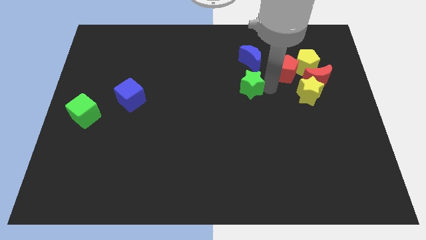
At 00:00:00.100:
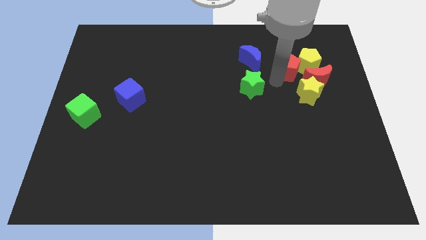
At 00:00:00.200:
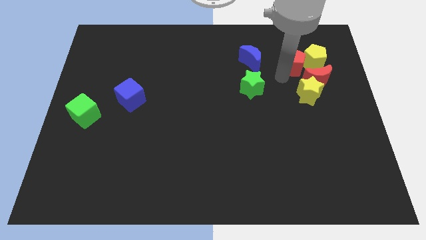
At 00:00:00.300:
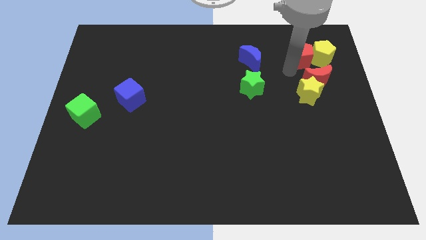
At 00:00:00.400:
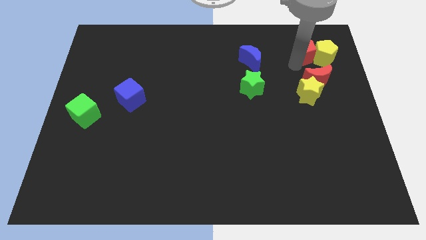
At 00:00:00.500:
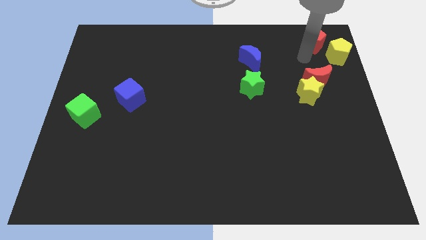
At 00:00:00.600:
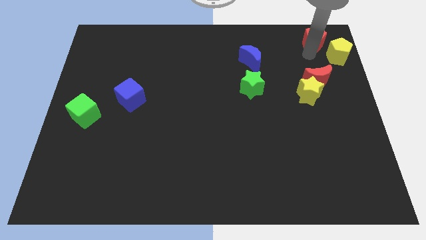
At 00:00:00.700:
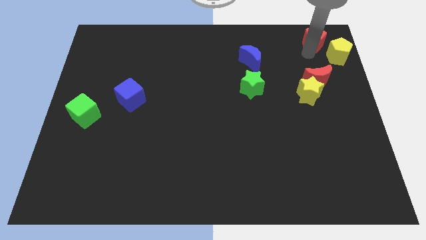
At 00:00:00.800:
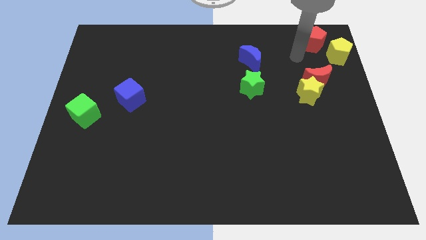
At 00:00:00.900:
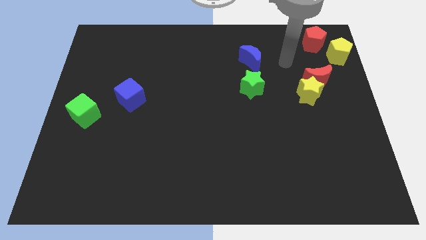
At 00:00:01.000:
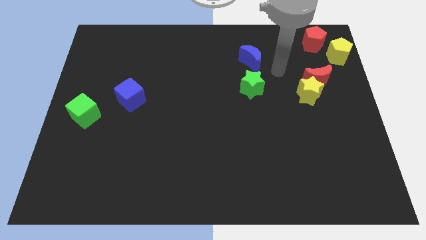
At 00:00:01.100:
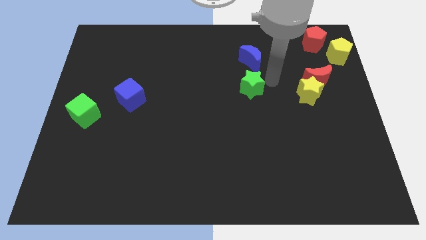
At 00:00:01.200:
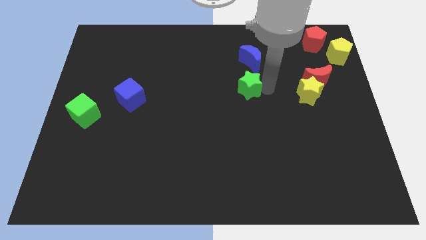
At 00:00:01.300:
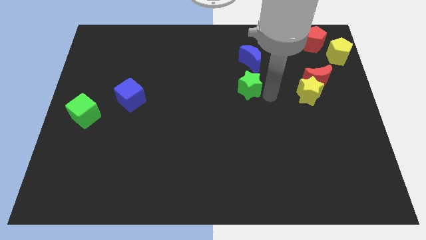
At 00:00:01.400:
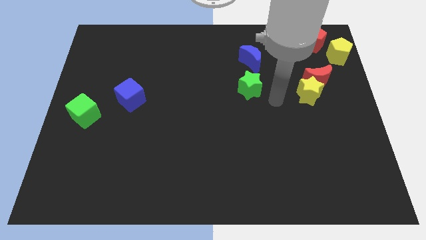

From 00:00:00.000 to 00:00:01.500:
slide the red pentagon and yellow pentagon to the top right corner of the board

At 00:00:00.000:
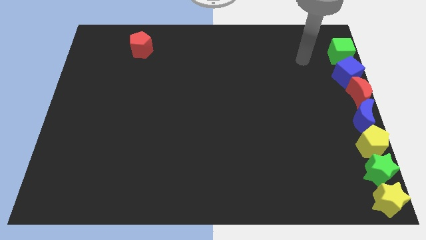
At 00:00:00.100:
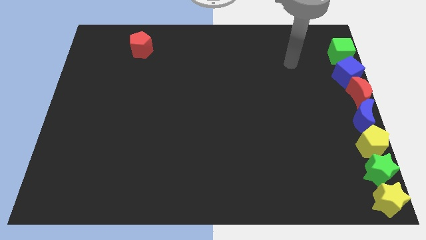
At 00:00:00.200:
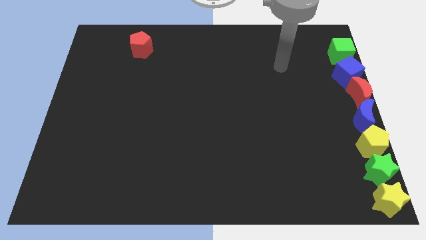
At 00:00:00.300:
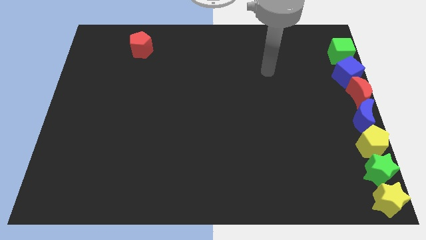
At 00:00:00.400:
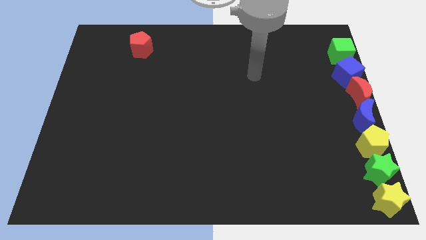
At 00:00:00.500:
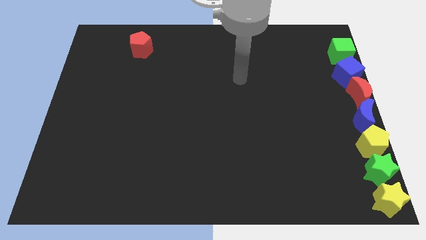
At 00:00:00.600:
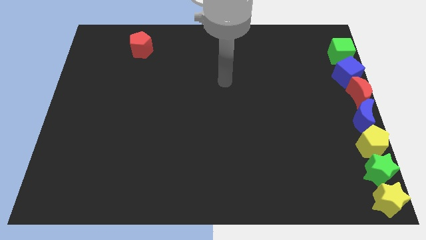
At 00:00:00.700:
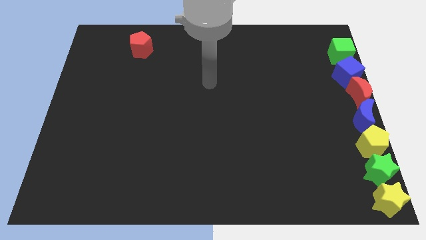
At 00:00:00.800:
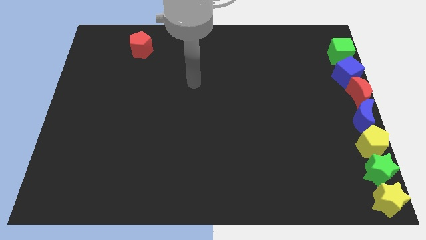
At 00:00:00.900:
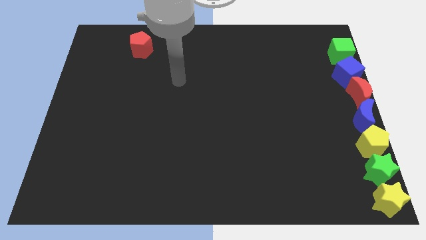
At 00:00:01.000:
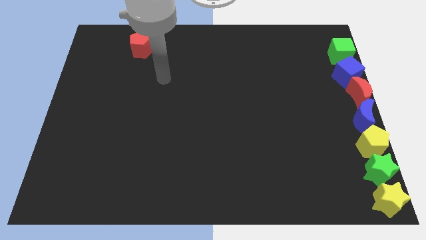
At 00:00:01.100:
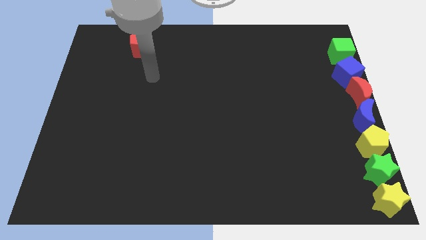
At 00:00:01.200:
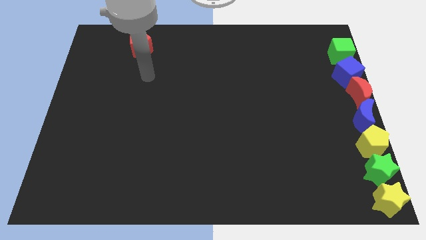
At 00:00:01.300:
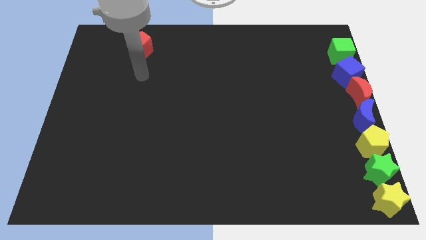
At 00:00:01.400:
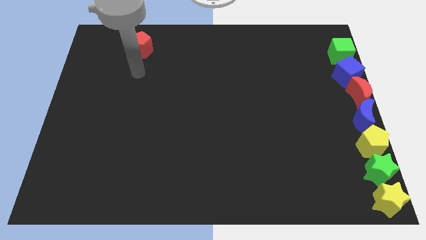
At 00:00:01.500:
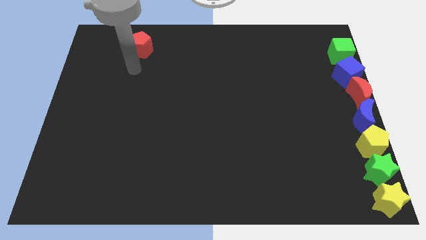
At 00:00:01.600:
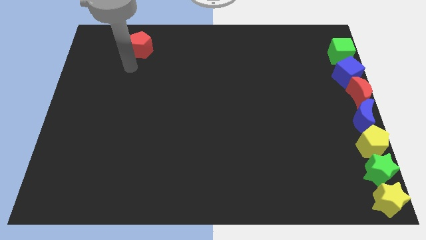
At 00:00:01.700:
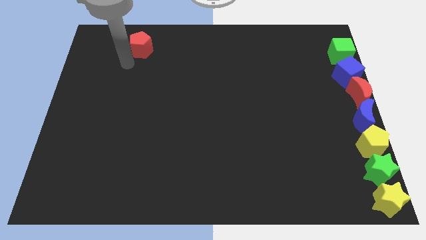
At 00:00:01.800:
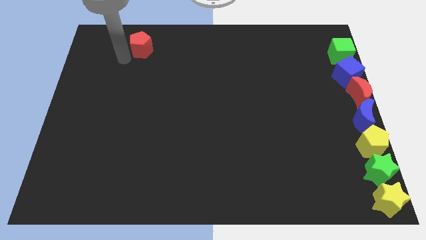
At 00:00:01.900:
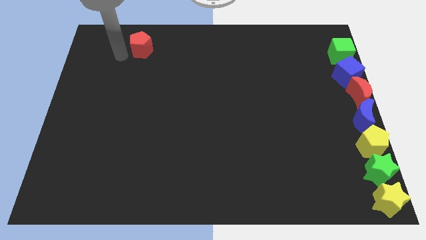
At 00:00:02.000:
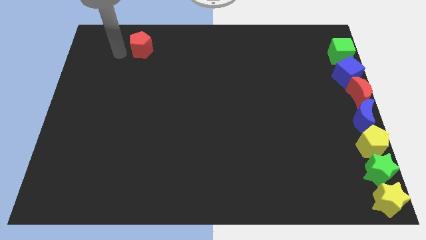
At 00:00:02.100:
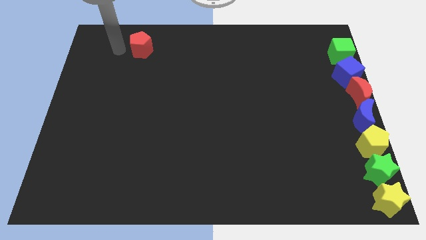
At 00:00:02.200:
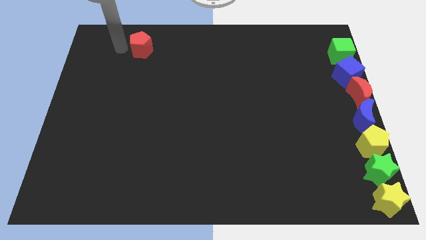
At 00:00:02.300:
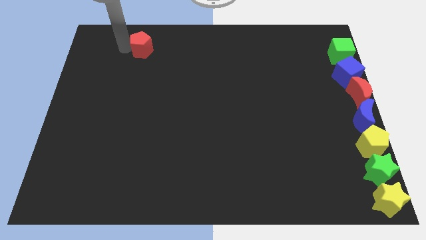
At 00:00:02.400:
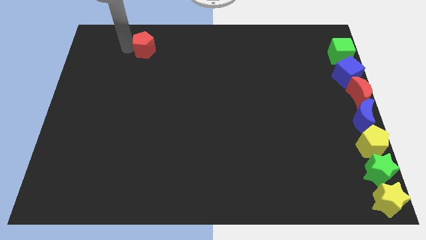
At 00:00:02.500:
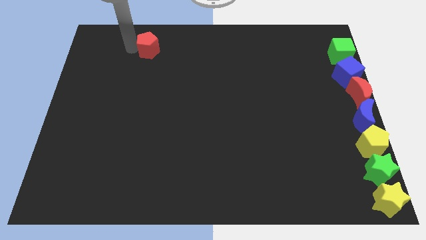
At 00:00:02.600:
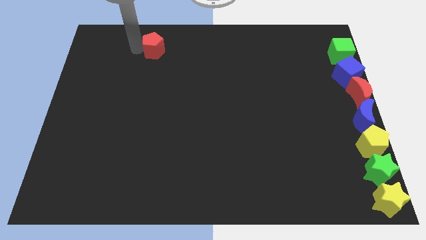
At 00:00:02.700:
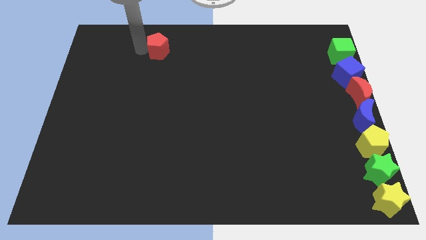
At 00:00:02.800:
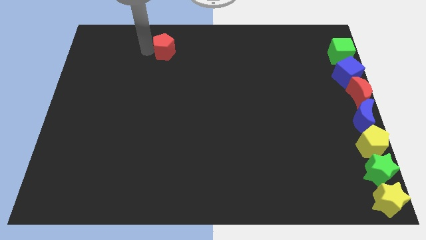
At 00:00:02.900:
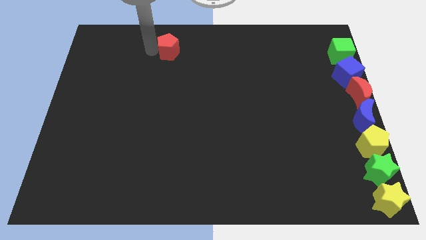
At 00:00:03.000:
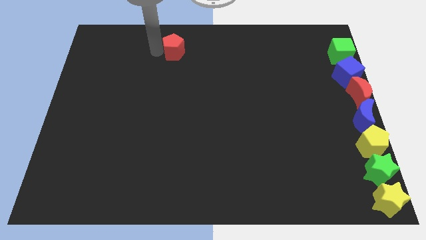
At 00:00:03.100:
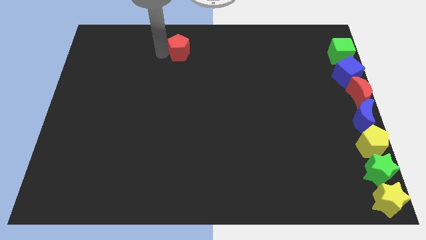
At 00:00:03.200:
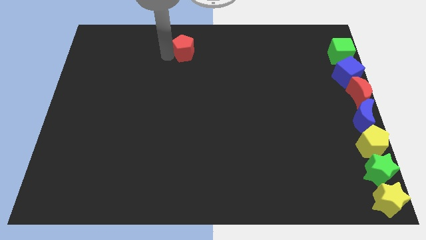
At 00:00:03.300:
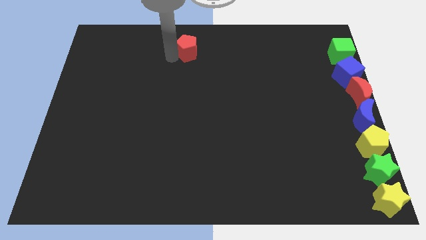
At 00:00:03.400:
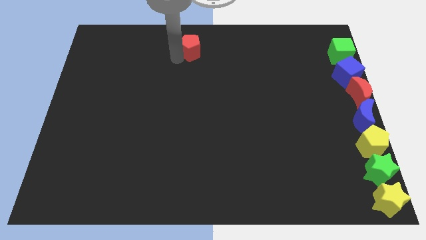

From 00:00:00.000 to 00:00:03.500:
drag red pentagon towards right

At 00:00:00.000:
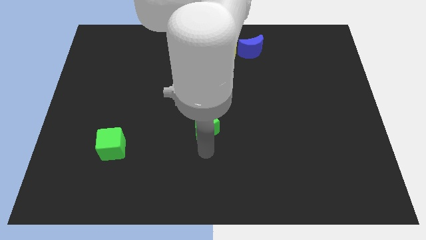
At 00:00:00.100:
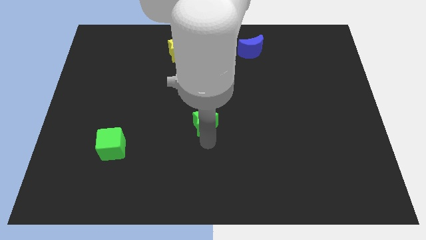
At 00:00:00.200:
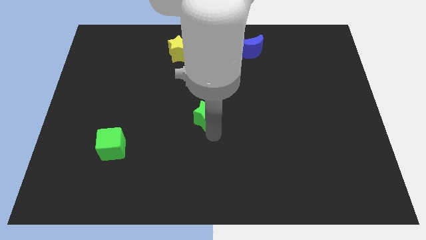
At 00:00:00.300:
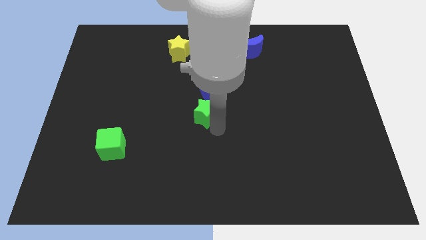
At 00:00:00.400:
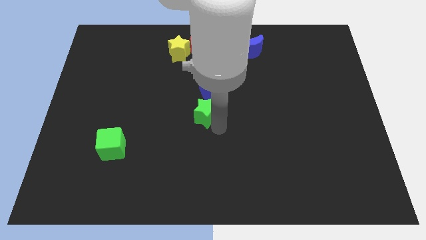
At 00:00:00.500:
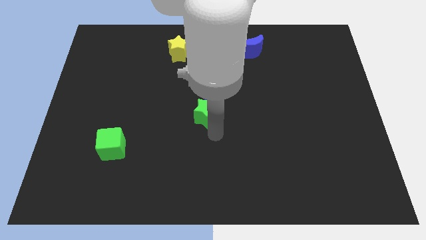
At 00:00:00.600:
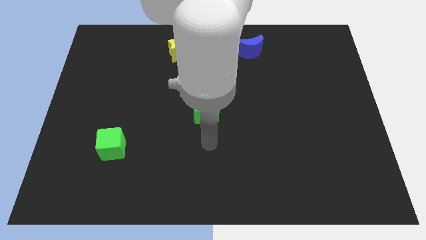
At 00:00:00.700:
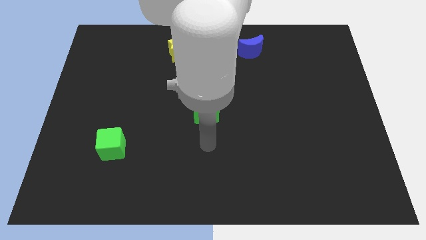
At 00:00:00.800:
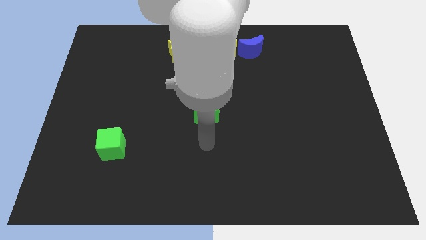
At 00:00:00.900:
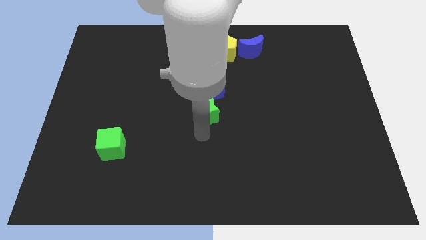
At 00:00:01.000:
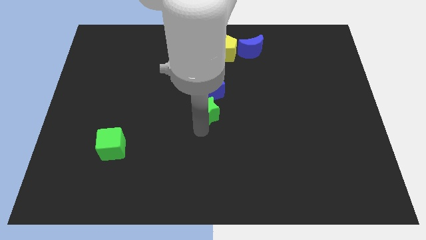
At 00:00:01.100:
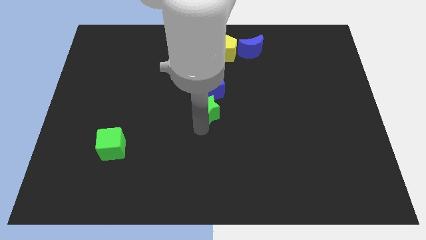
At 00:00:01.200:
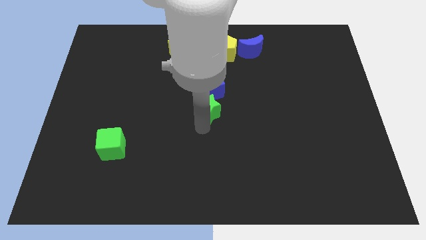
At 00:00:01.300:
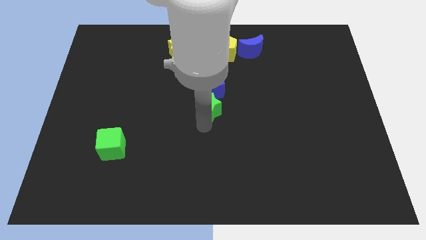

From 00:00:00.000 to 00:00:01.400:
place the green star below the blue cube

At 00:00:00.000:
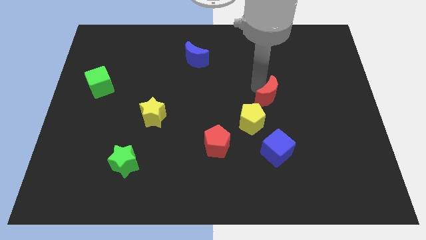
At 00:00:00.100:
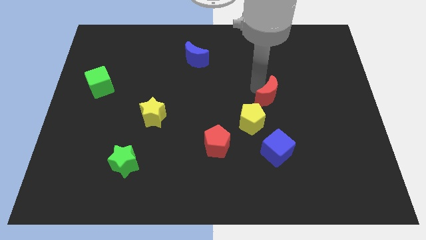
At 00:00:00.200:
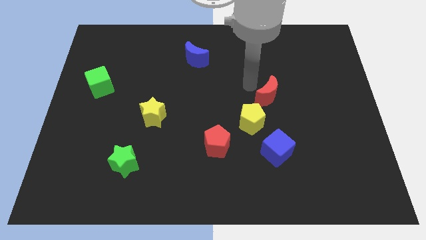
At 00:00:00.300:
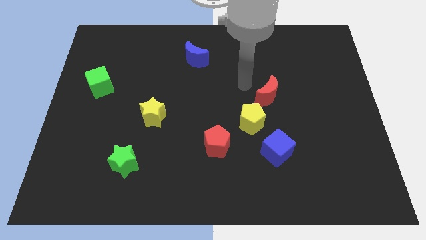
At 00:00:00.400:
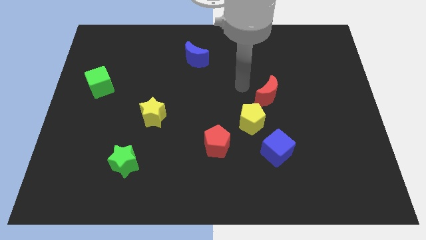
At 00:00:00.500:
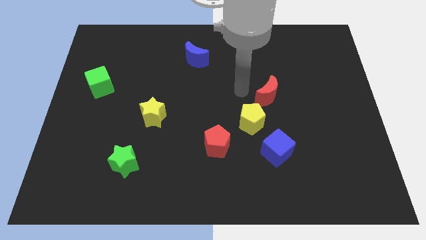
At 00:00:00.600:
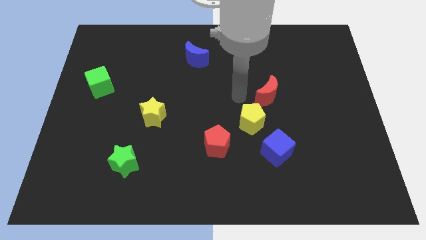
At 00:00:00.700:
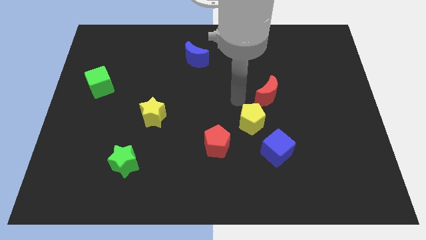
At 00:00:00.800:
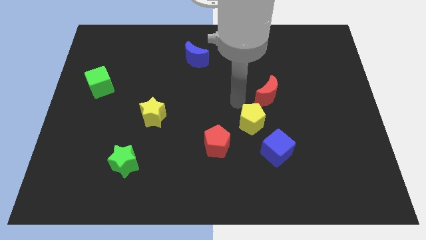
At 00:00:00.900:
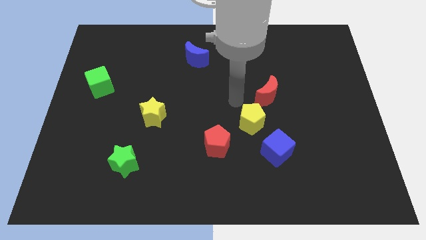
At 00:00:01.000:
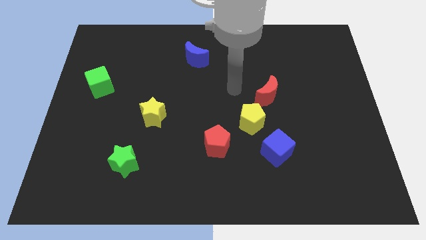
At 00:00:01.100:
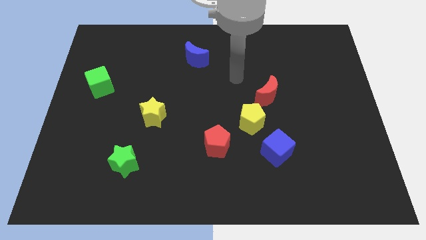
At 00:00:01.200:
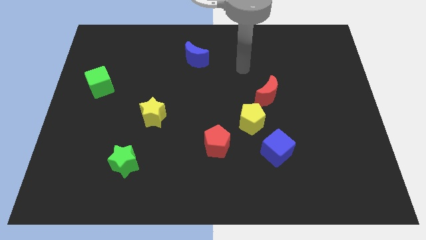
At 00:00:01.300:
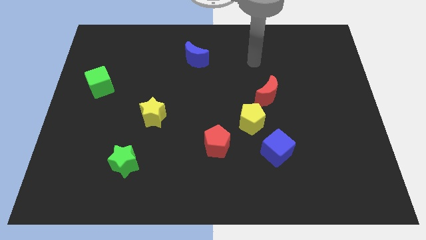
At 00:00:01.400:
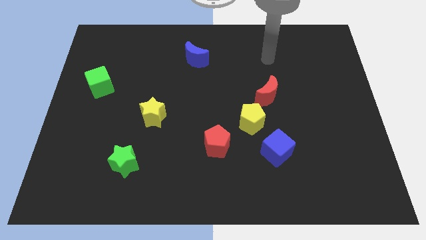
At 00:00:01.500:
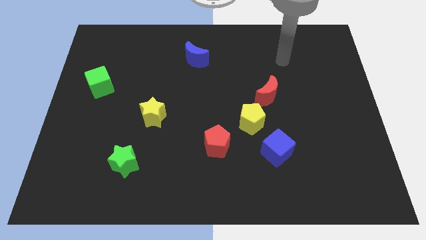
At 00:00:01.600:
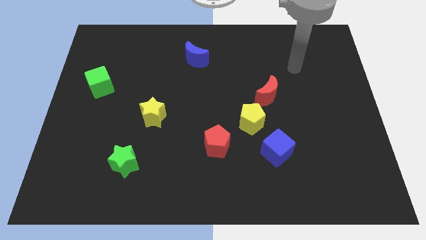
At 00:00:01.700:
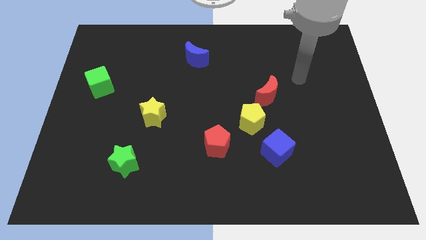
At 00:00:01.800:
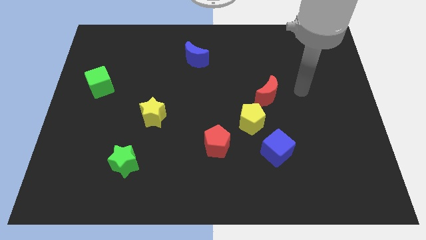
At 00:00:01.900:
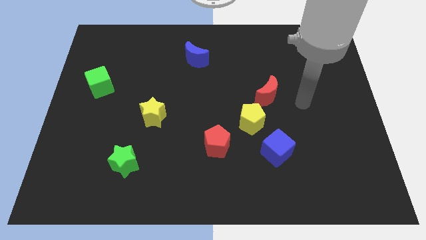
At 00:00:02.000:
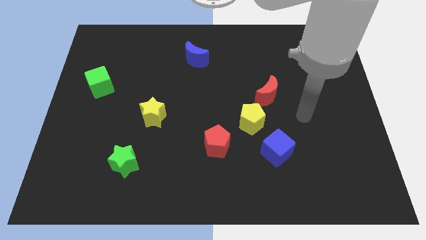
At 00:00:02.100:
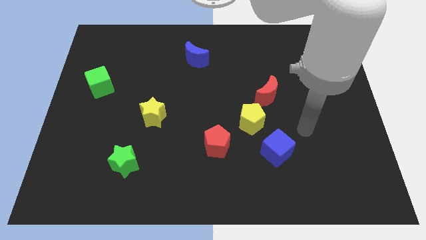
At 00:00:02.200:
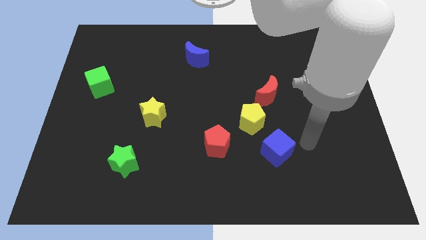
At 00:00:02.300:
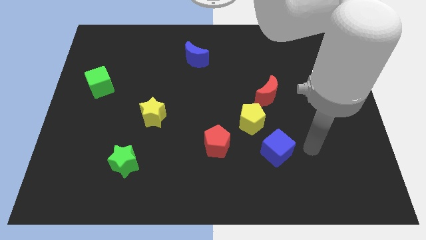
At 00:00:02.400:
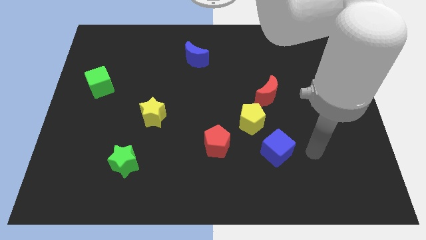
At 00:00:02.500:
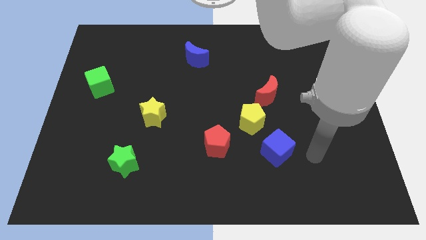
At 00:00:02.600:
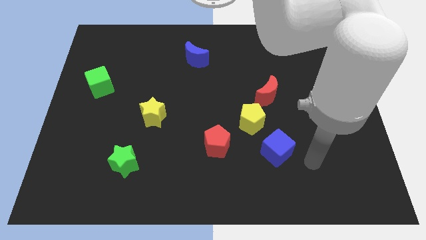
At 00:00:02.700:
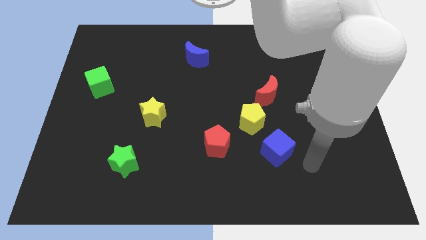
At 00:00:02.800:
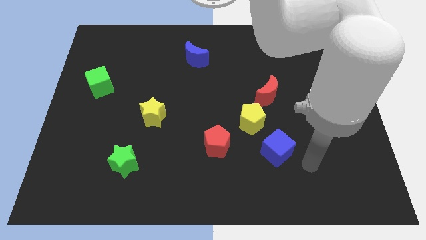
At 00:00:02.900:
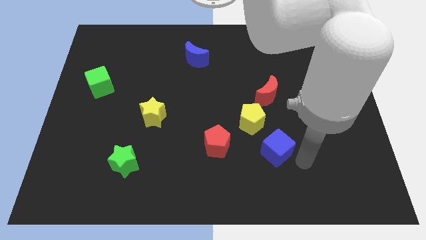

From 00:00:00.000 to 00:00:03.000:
point the arm at the bottom right of the blue cube
